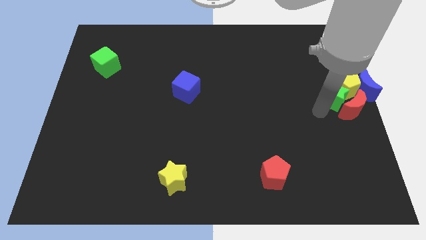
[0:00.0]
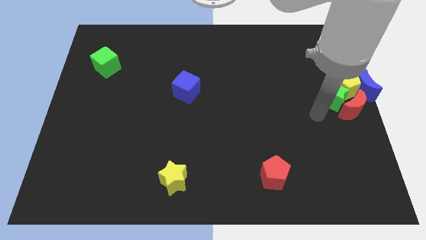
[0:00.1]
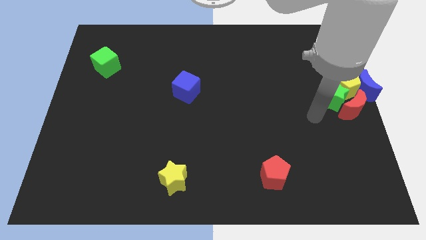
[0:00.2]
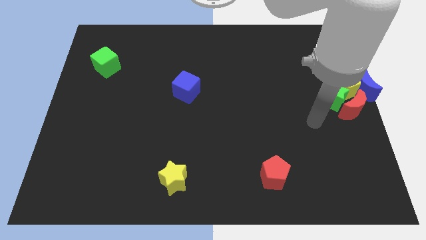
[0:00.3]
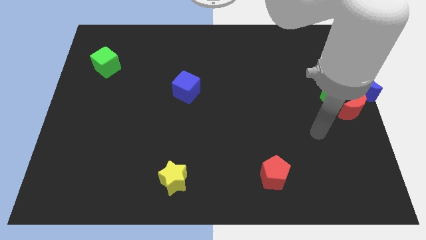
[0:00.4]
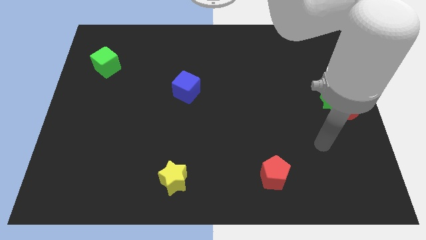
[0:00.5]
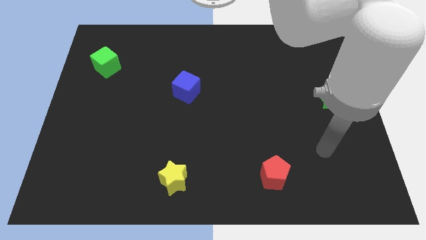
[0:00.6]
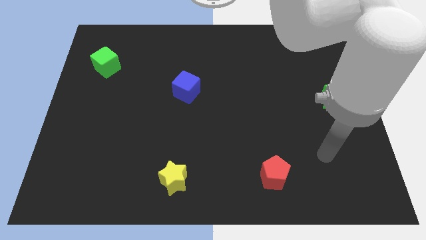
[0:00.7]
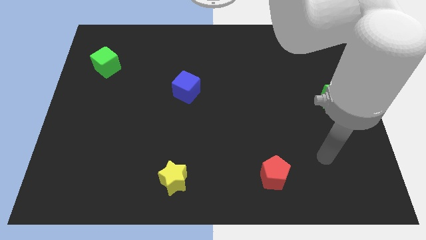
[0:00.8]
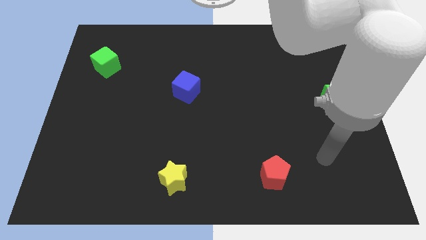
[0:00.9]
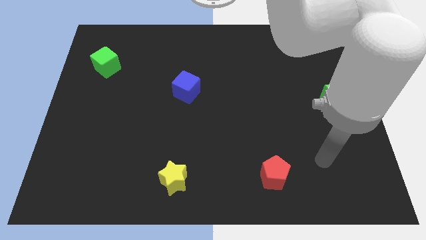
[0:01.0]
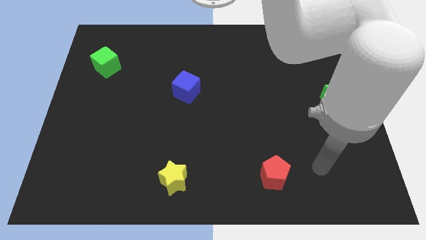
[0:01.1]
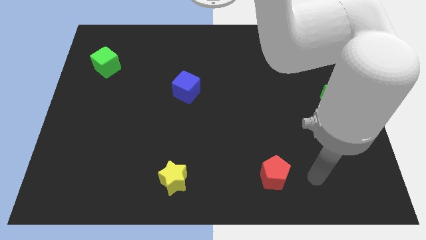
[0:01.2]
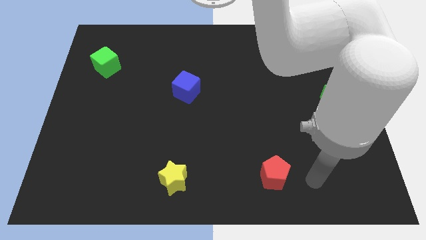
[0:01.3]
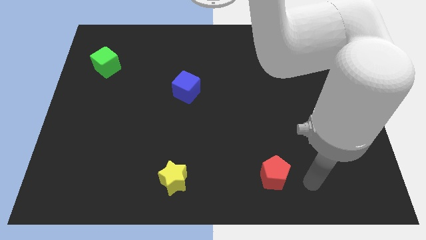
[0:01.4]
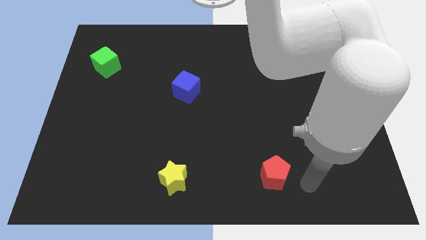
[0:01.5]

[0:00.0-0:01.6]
move your arm away from the green star

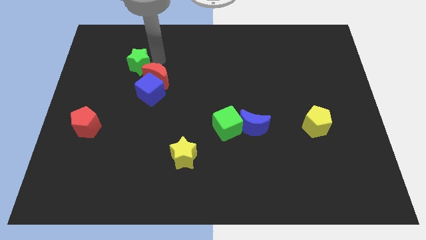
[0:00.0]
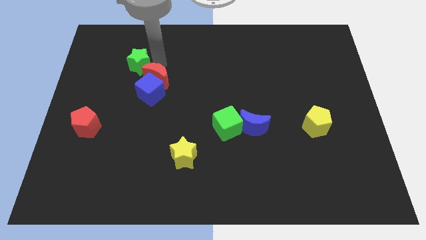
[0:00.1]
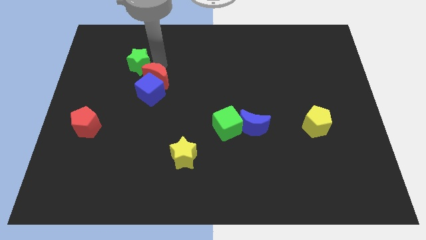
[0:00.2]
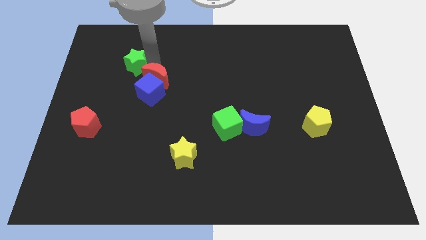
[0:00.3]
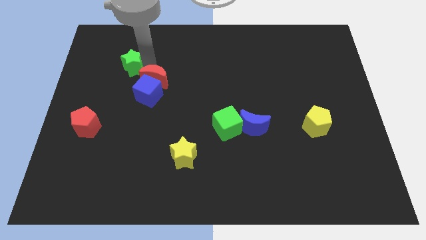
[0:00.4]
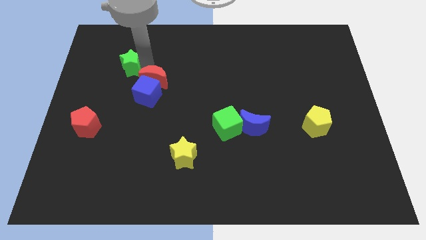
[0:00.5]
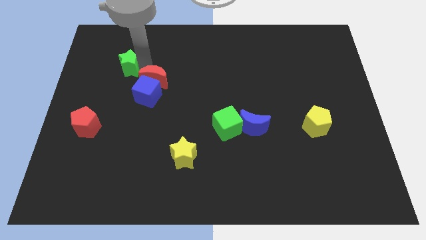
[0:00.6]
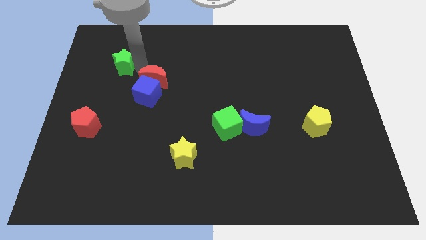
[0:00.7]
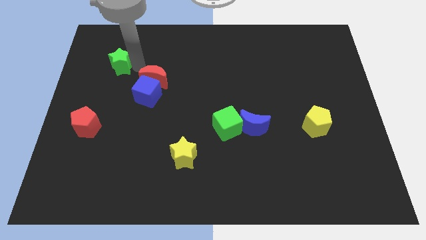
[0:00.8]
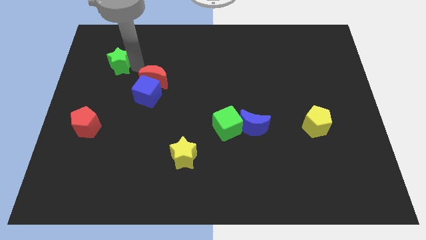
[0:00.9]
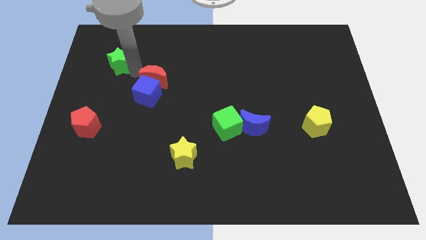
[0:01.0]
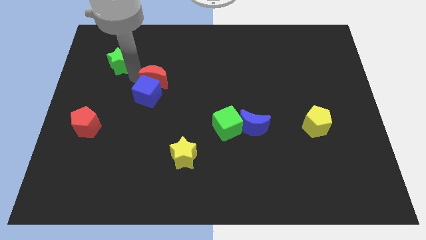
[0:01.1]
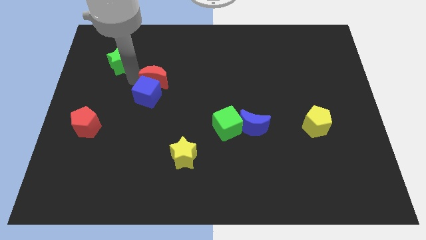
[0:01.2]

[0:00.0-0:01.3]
separate green star from red moon

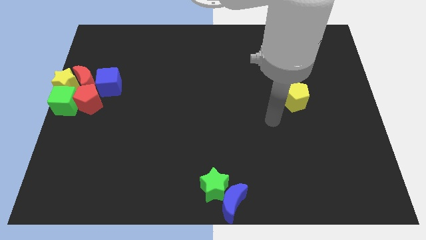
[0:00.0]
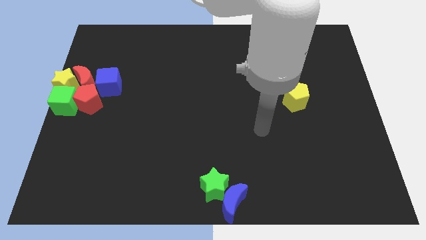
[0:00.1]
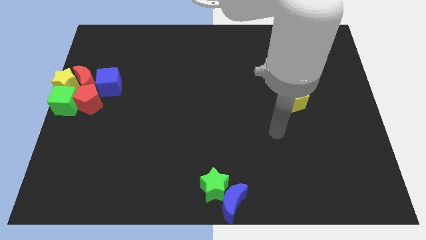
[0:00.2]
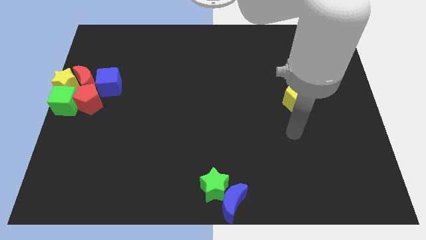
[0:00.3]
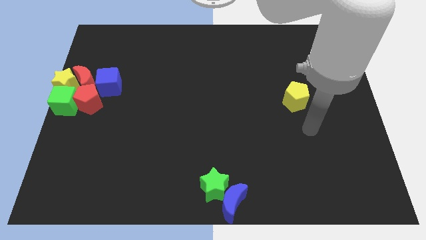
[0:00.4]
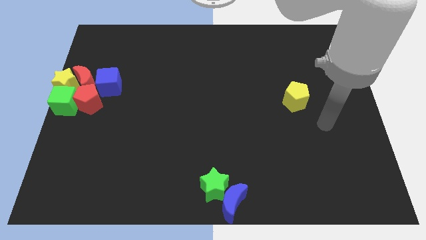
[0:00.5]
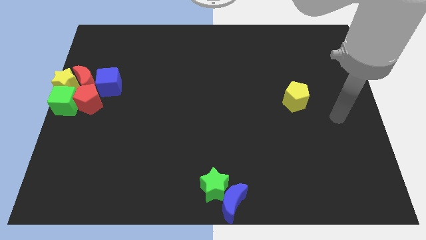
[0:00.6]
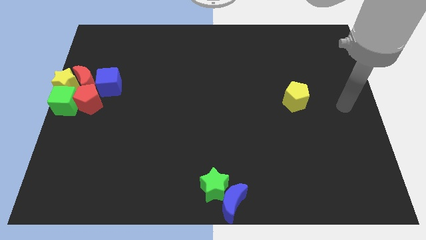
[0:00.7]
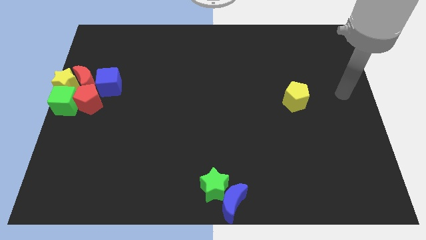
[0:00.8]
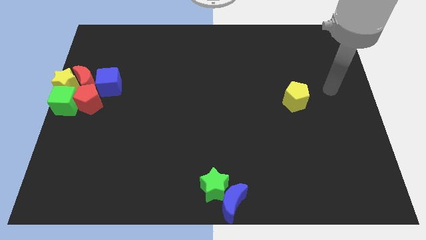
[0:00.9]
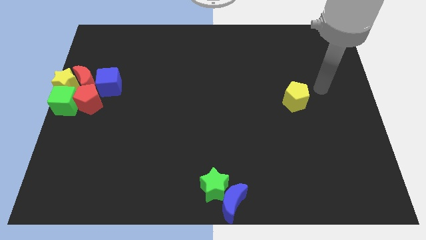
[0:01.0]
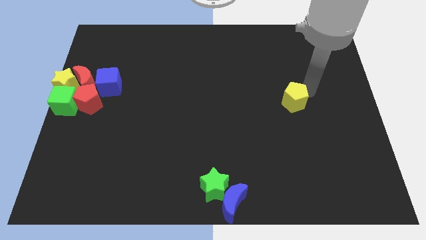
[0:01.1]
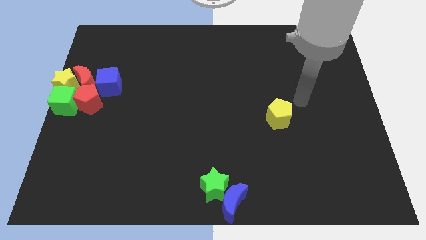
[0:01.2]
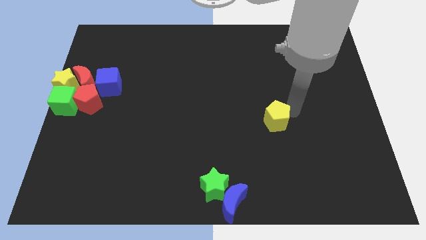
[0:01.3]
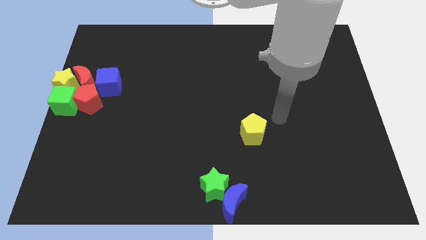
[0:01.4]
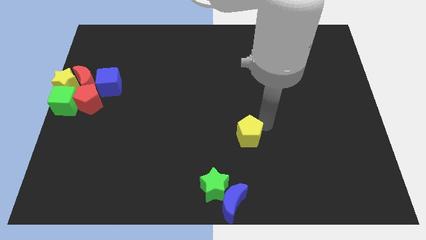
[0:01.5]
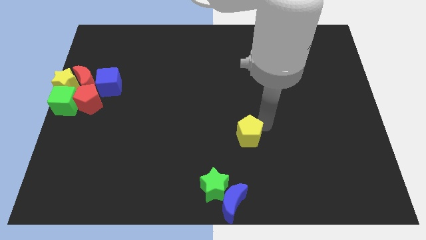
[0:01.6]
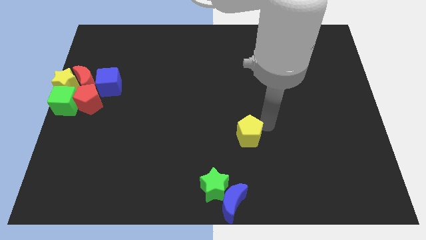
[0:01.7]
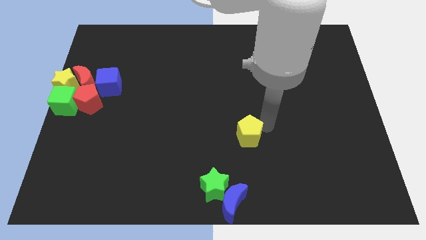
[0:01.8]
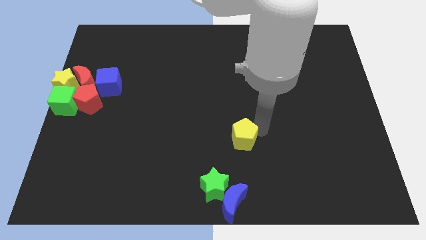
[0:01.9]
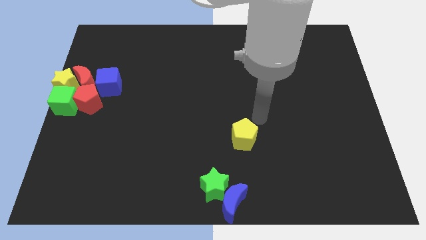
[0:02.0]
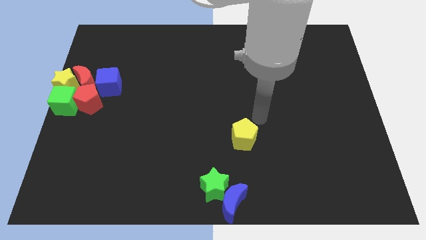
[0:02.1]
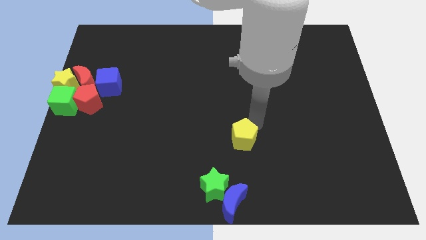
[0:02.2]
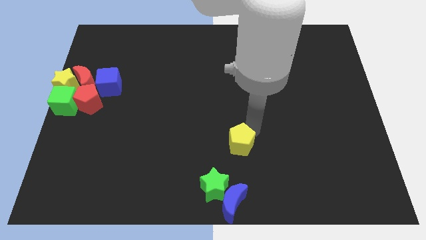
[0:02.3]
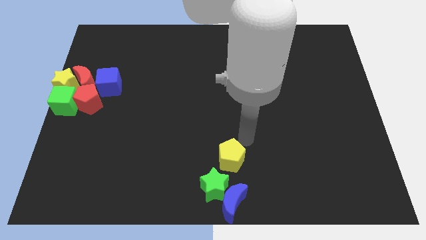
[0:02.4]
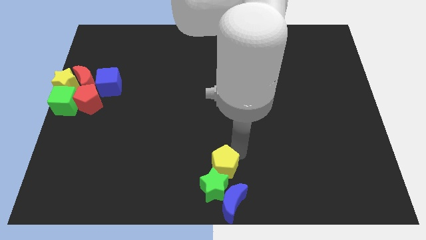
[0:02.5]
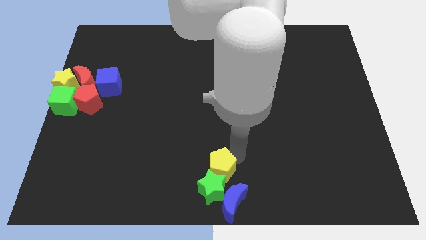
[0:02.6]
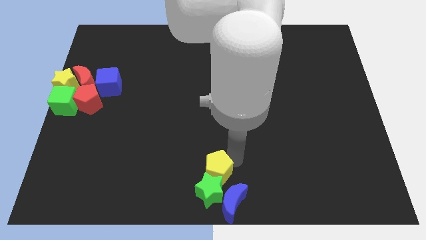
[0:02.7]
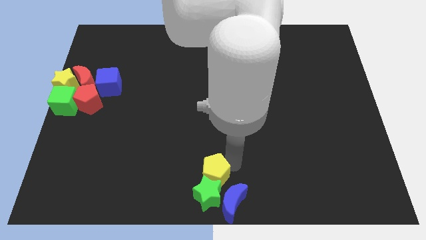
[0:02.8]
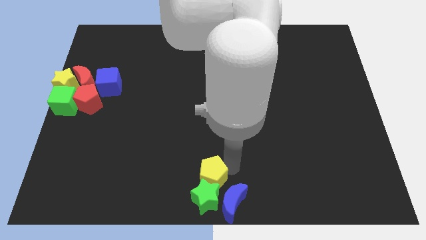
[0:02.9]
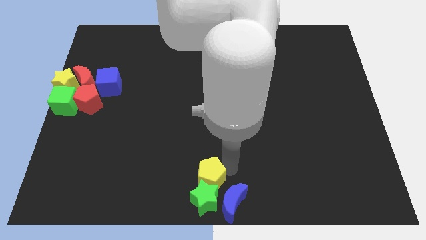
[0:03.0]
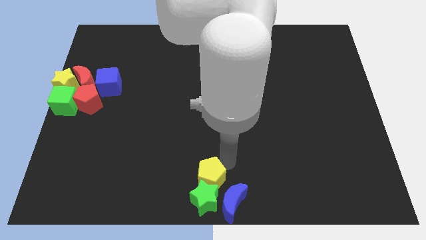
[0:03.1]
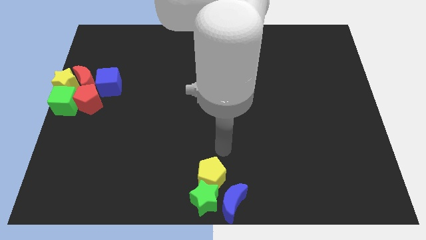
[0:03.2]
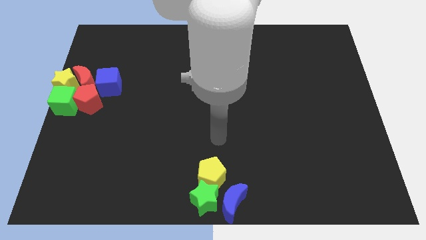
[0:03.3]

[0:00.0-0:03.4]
push the yellow pentagon above the green star

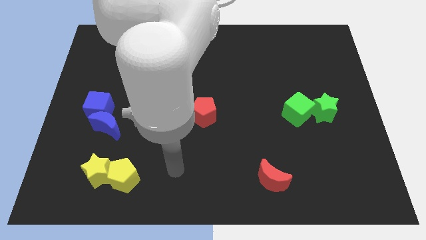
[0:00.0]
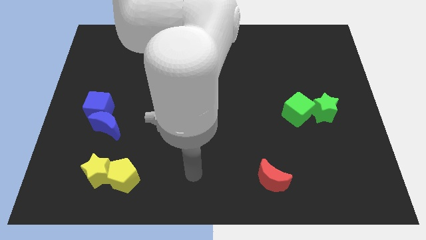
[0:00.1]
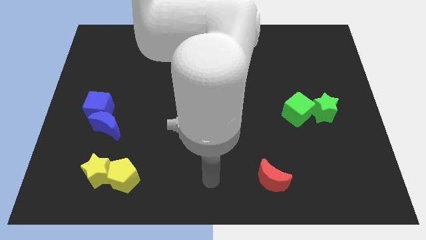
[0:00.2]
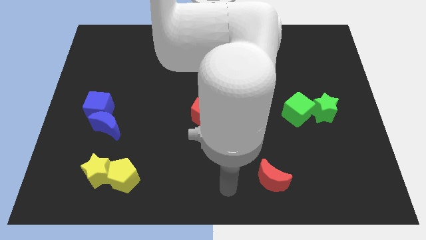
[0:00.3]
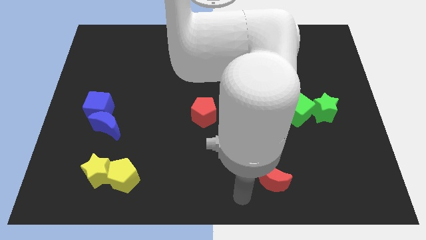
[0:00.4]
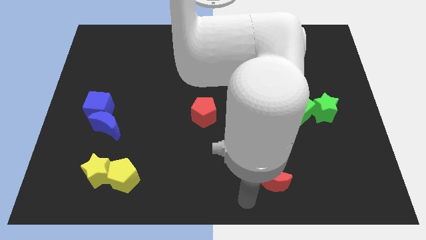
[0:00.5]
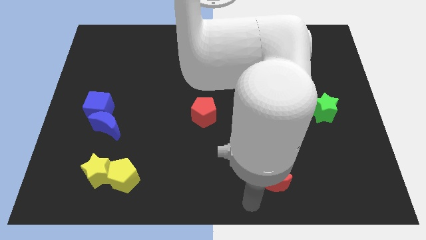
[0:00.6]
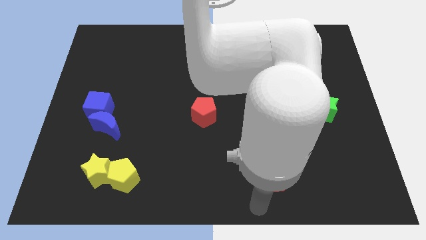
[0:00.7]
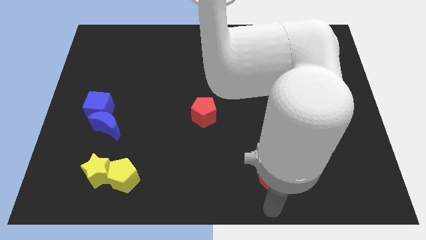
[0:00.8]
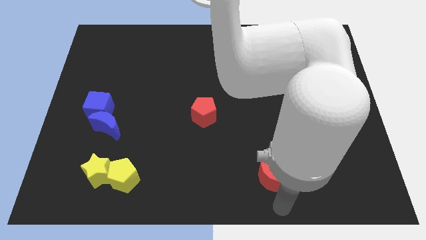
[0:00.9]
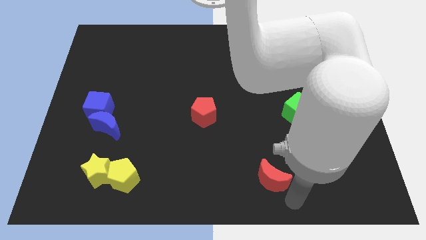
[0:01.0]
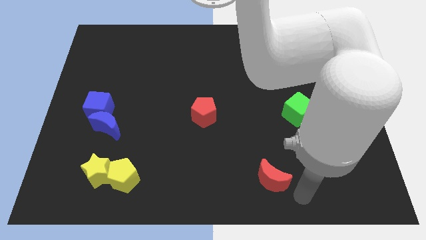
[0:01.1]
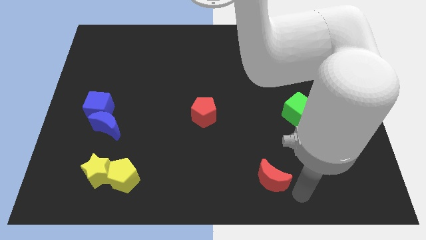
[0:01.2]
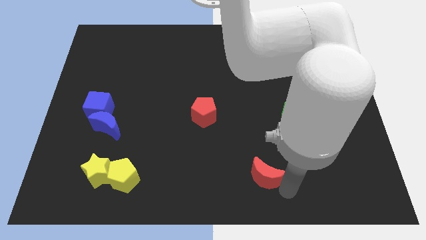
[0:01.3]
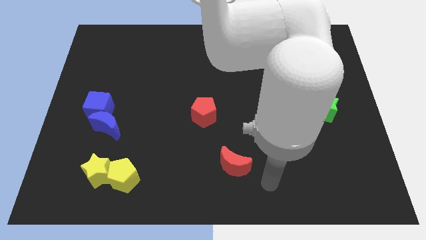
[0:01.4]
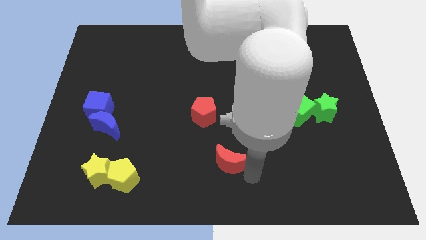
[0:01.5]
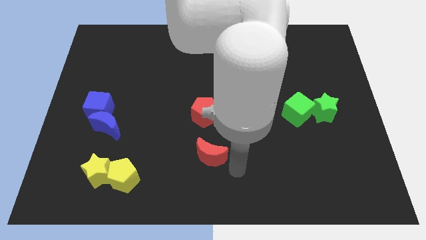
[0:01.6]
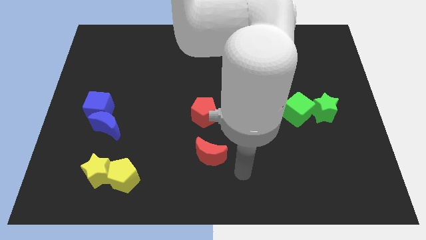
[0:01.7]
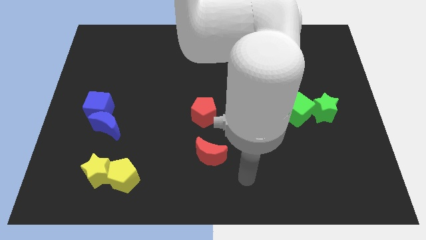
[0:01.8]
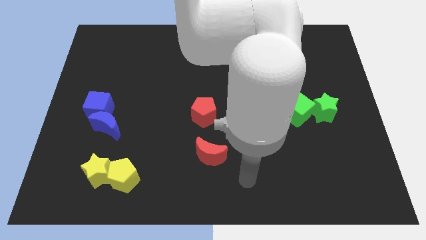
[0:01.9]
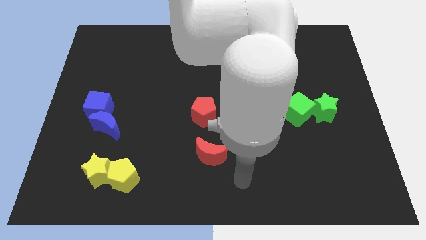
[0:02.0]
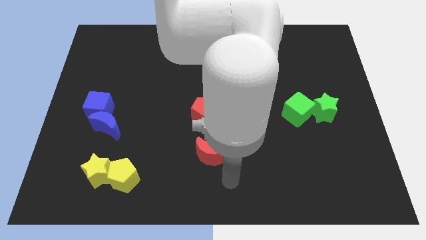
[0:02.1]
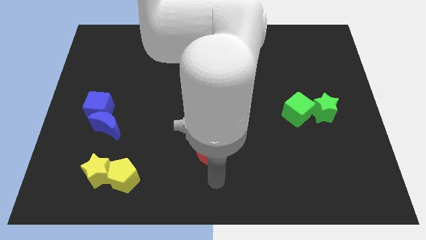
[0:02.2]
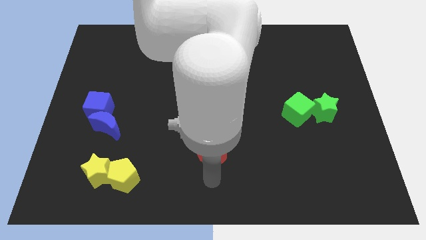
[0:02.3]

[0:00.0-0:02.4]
place red moon to the bottom of the red pentagon

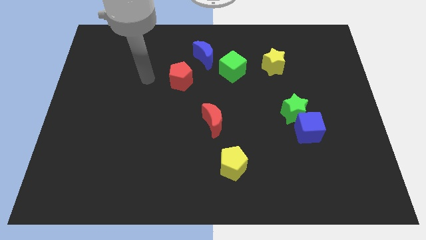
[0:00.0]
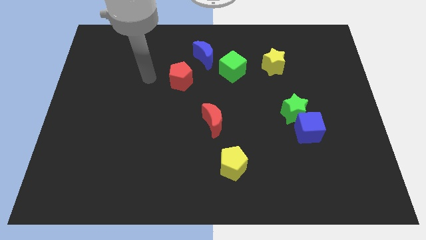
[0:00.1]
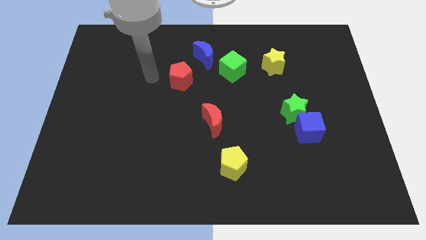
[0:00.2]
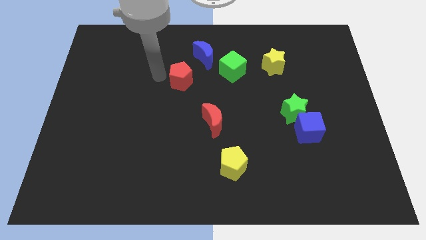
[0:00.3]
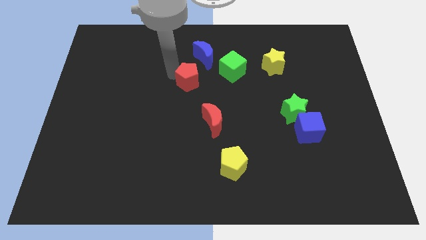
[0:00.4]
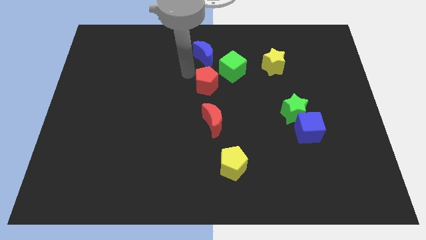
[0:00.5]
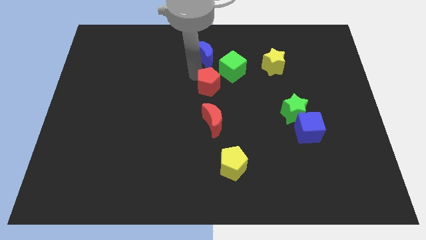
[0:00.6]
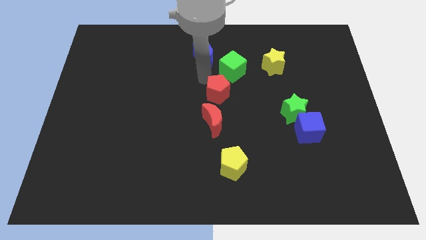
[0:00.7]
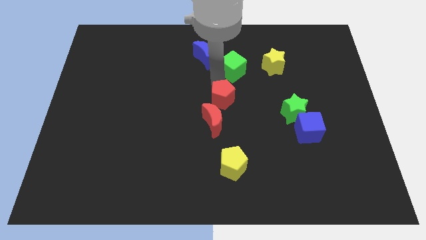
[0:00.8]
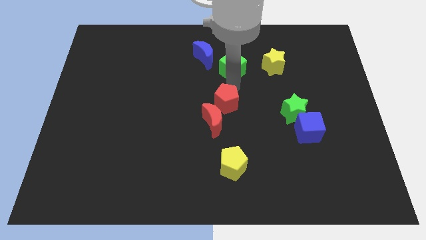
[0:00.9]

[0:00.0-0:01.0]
place the red pentagon above the red moon
